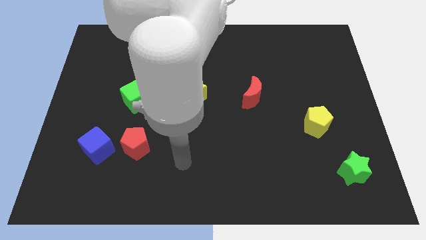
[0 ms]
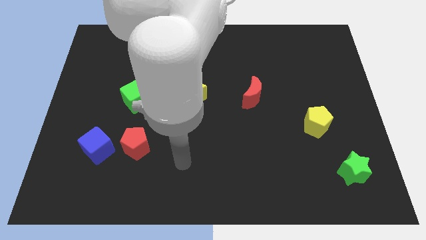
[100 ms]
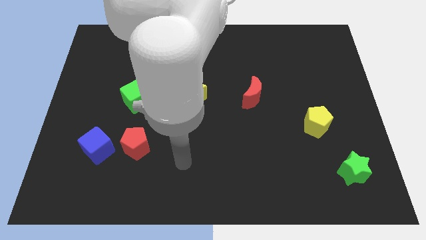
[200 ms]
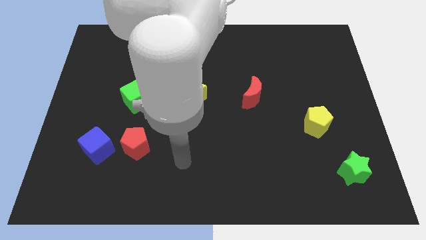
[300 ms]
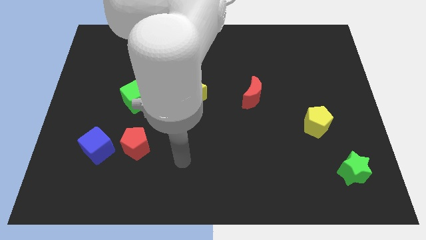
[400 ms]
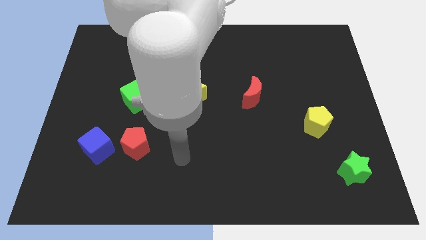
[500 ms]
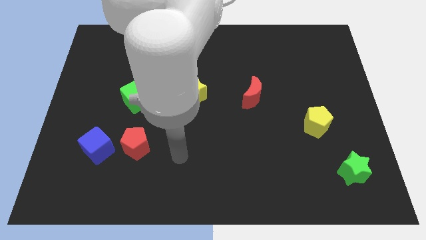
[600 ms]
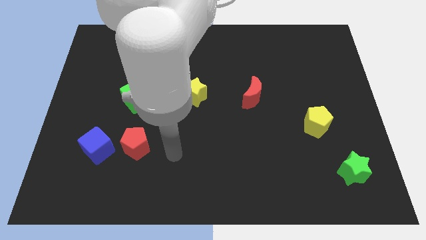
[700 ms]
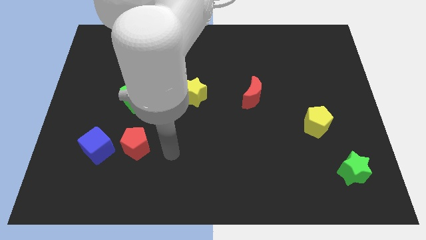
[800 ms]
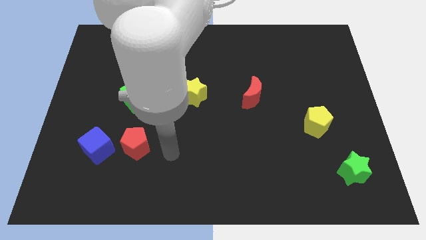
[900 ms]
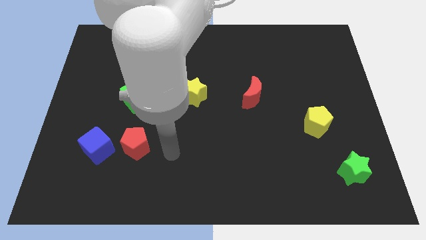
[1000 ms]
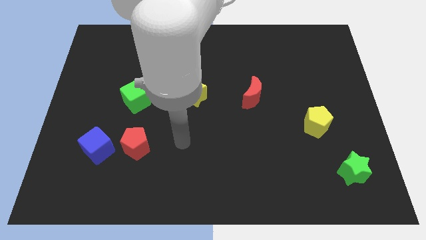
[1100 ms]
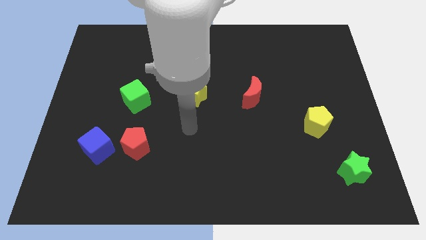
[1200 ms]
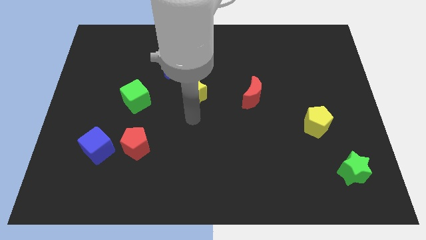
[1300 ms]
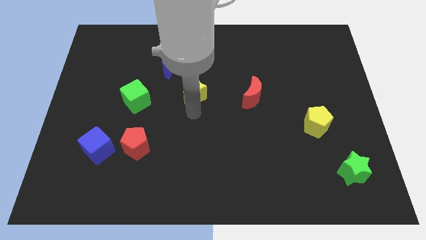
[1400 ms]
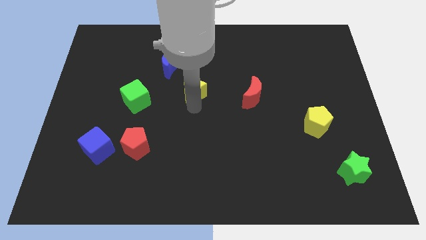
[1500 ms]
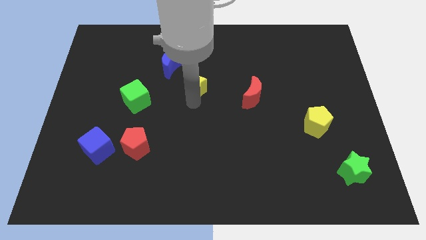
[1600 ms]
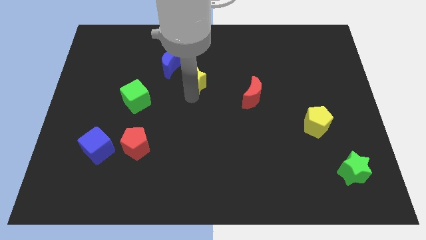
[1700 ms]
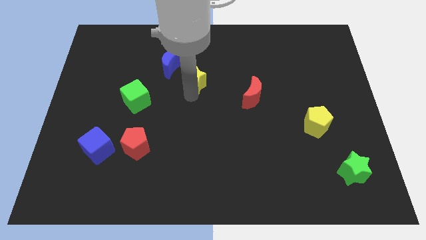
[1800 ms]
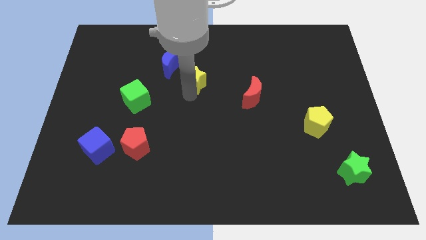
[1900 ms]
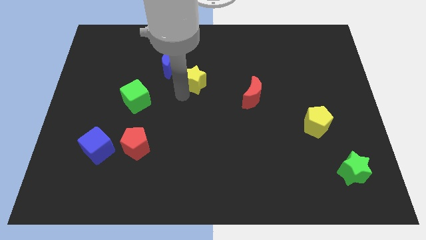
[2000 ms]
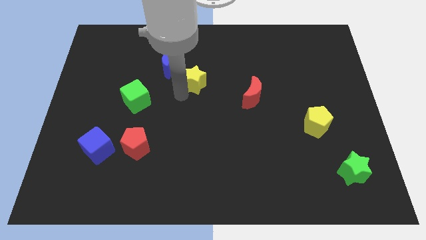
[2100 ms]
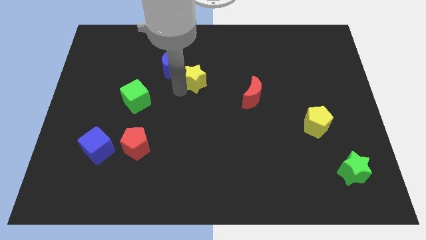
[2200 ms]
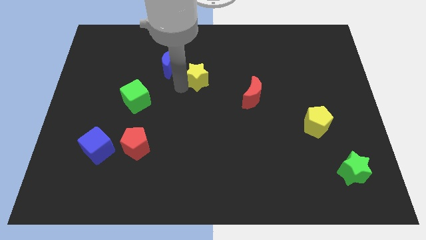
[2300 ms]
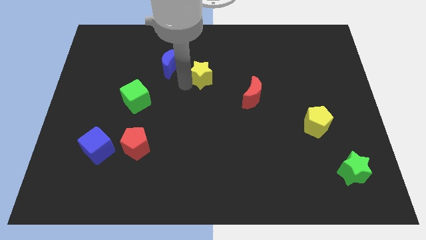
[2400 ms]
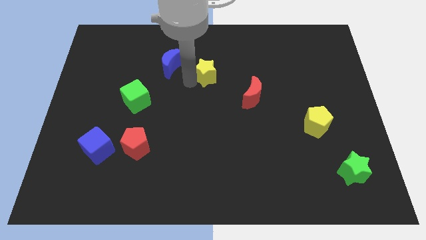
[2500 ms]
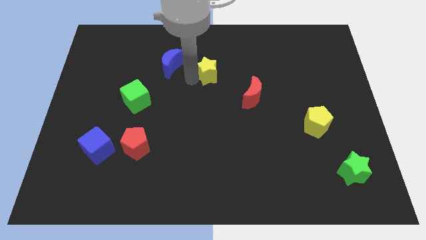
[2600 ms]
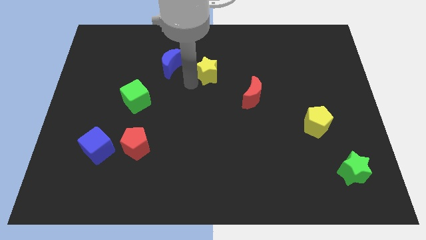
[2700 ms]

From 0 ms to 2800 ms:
move the yellow pentagon slightly up

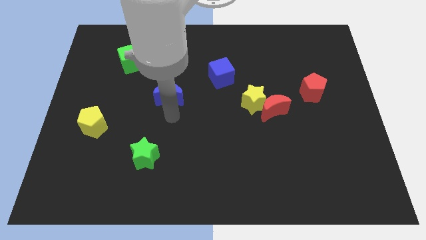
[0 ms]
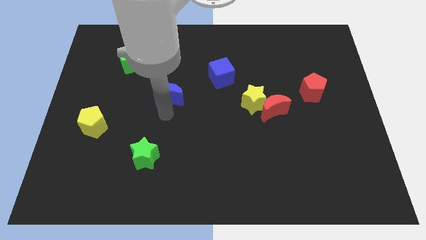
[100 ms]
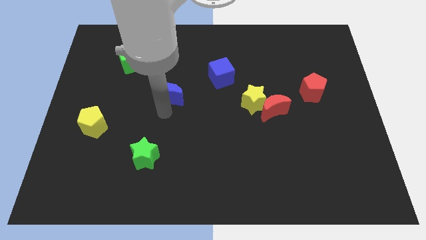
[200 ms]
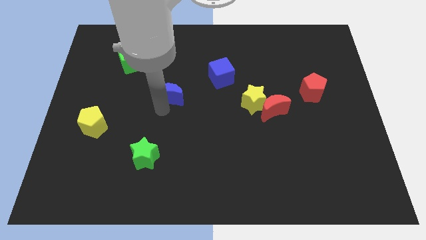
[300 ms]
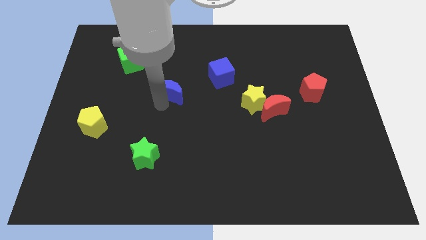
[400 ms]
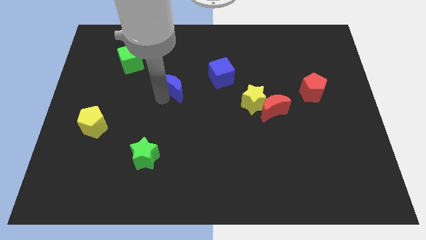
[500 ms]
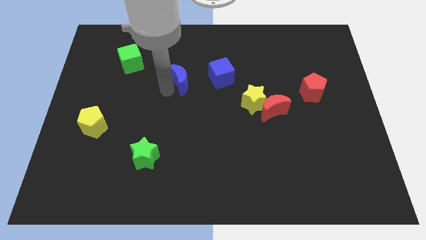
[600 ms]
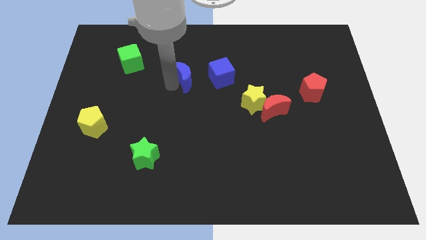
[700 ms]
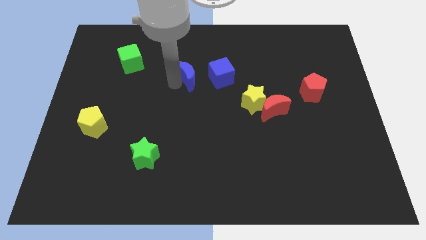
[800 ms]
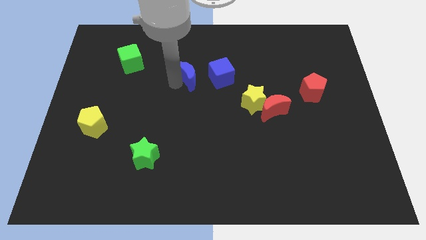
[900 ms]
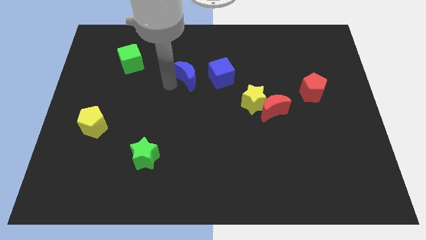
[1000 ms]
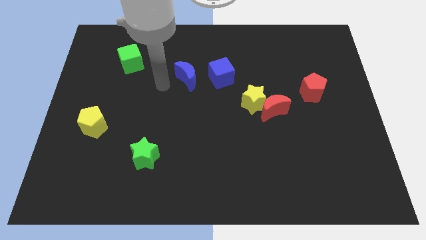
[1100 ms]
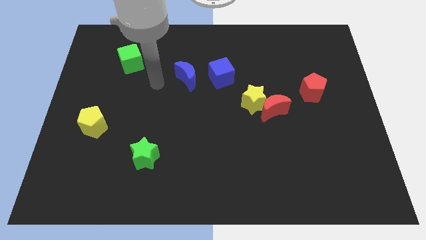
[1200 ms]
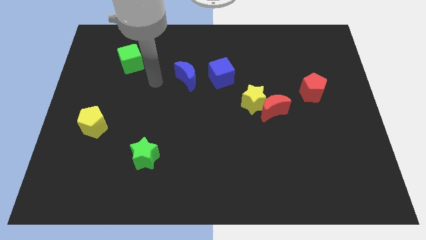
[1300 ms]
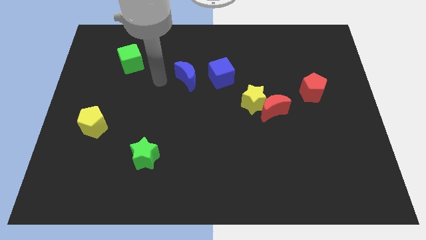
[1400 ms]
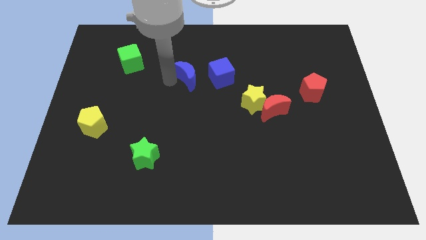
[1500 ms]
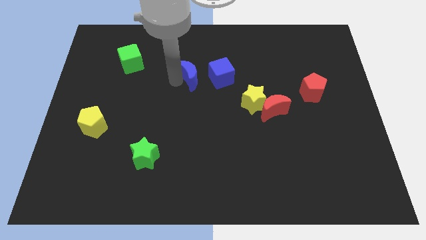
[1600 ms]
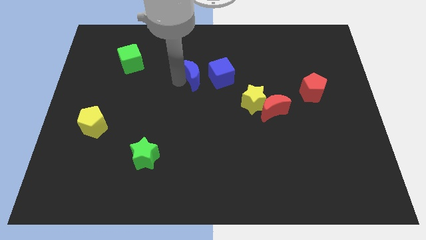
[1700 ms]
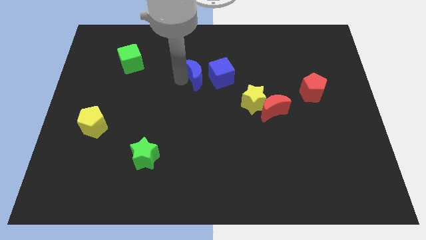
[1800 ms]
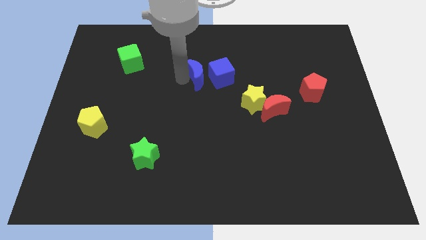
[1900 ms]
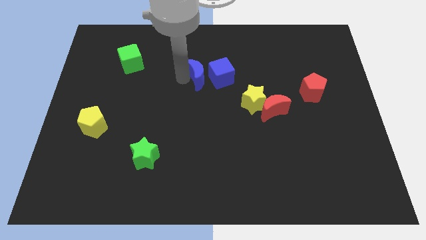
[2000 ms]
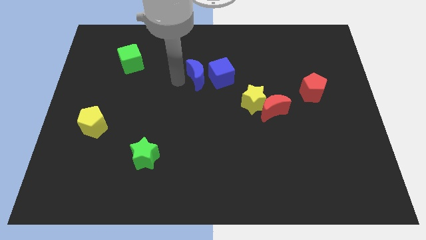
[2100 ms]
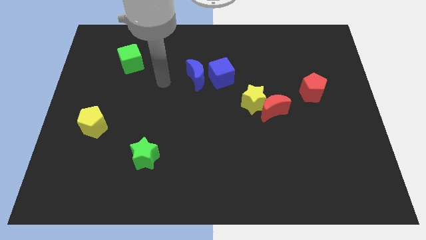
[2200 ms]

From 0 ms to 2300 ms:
push the blue moon to the left side of the blue cube

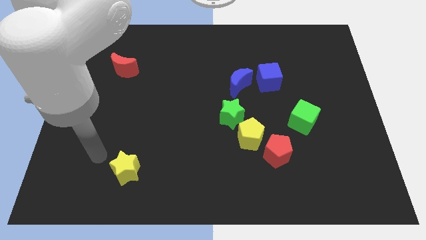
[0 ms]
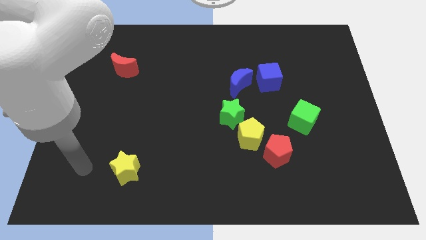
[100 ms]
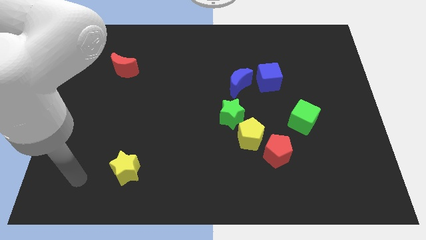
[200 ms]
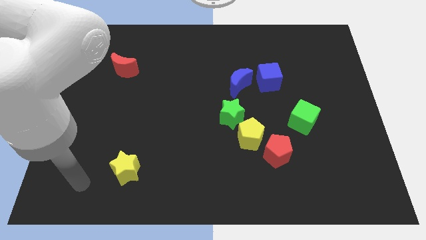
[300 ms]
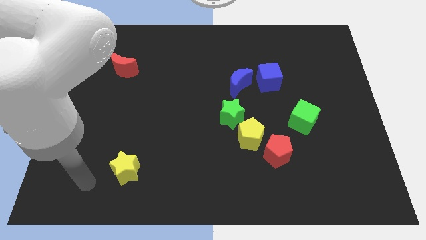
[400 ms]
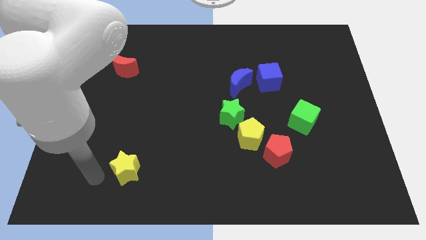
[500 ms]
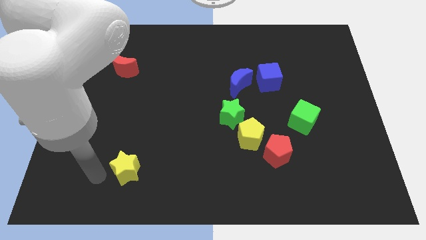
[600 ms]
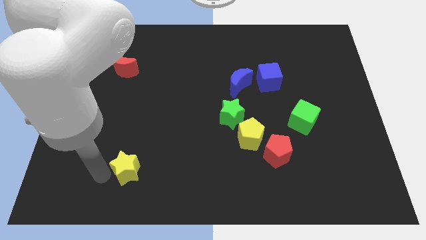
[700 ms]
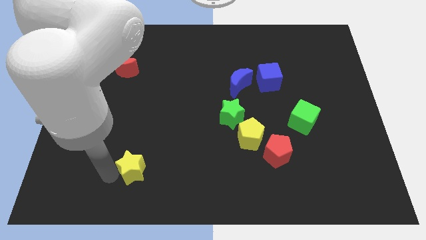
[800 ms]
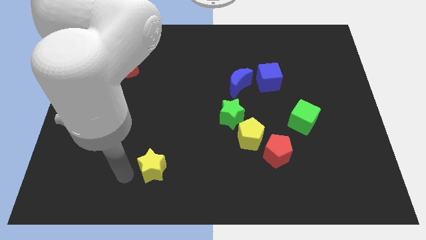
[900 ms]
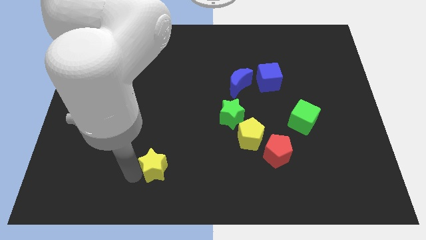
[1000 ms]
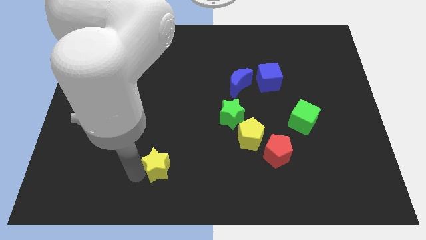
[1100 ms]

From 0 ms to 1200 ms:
move the yellow star to the bottom center

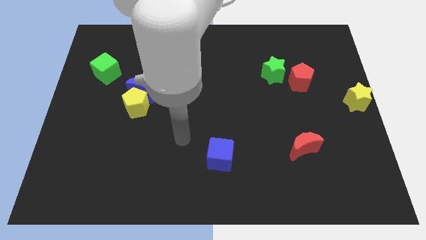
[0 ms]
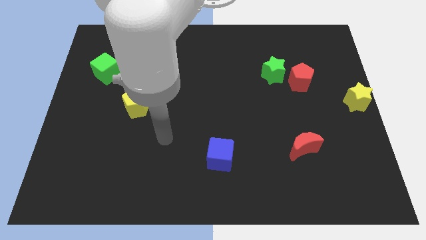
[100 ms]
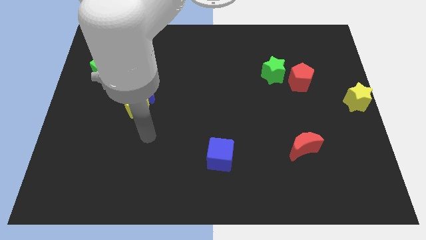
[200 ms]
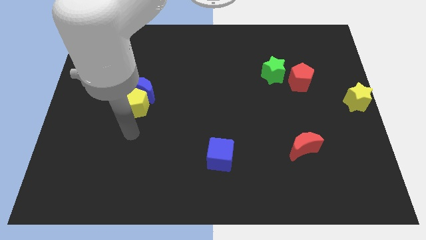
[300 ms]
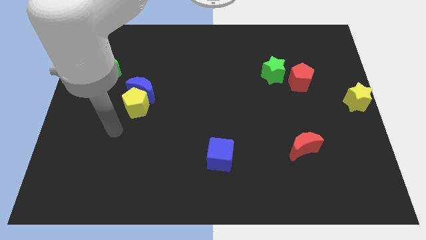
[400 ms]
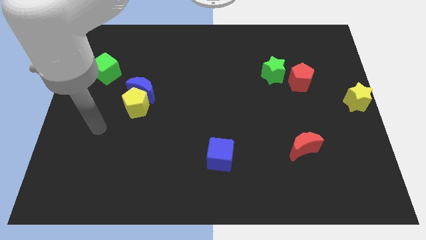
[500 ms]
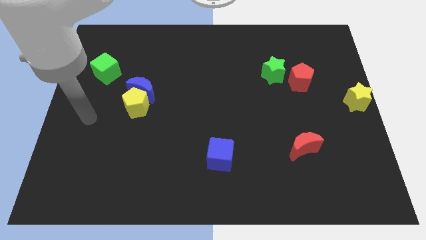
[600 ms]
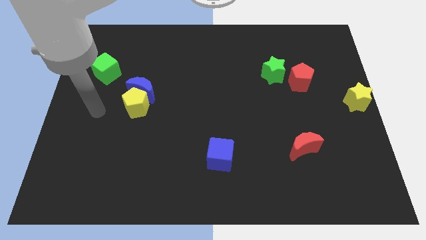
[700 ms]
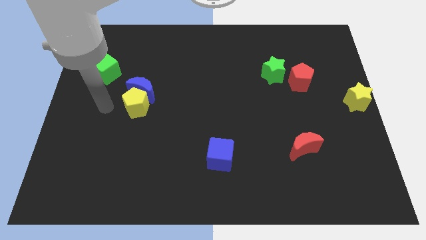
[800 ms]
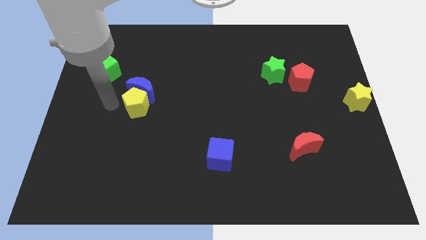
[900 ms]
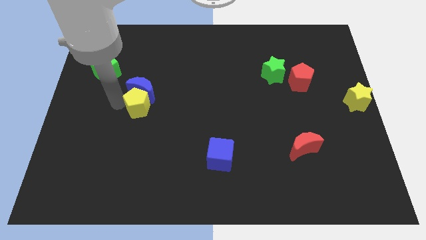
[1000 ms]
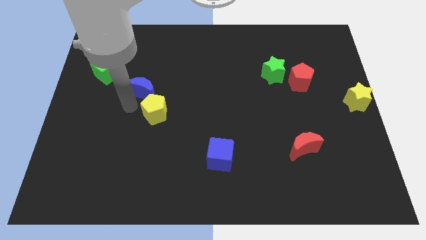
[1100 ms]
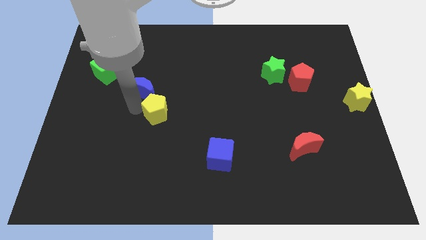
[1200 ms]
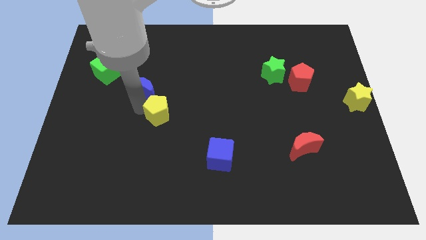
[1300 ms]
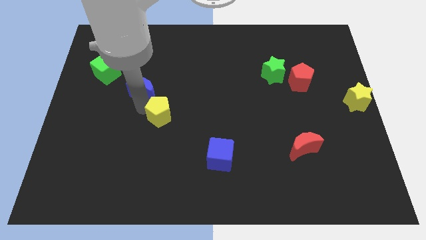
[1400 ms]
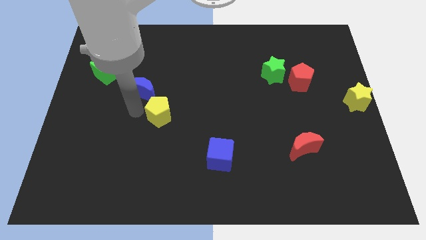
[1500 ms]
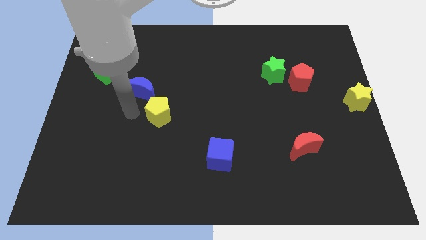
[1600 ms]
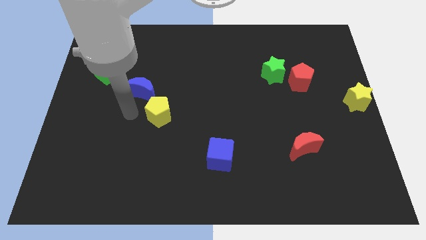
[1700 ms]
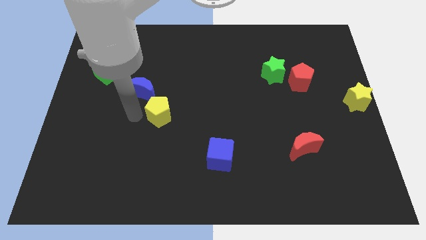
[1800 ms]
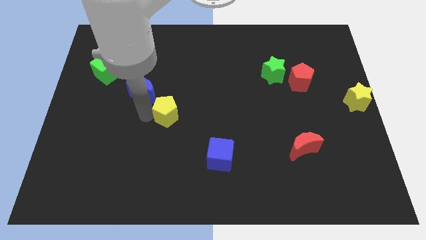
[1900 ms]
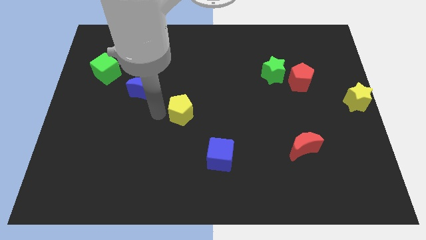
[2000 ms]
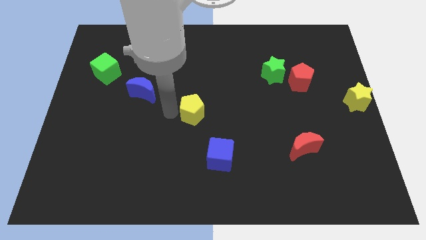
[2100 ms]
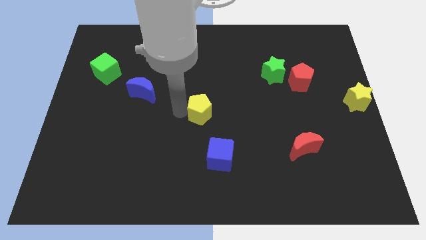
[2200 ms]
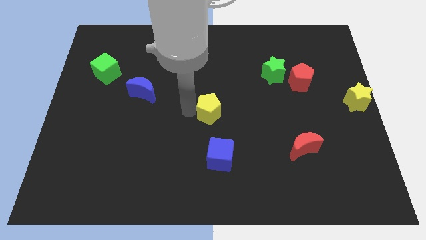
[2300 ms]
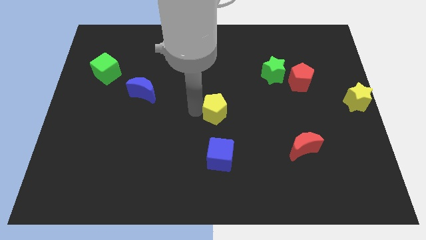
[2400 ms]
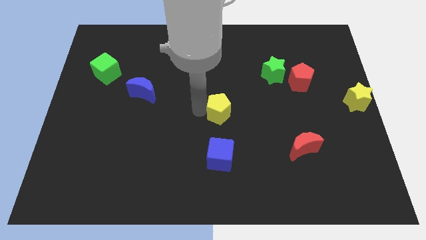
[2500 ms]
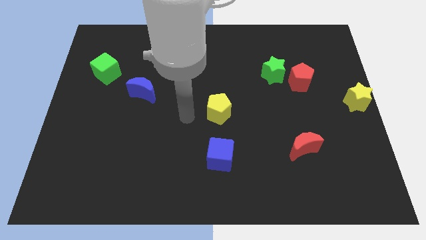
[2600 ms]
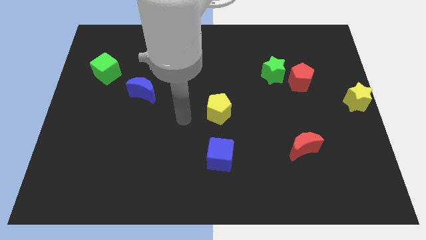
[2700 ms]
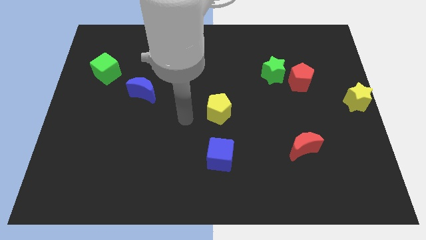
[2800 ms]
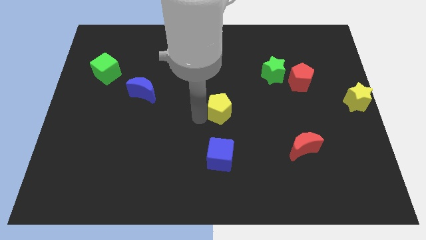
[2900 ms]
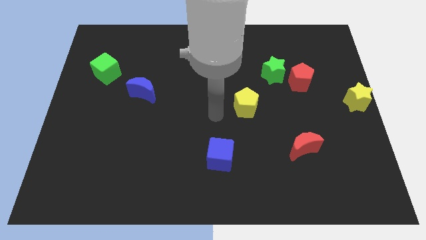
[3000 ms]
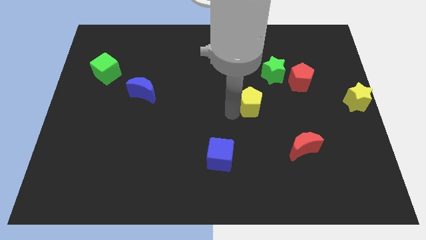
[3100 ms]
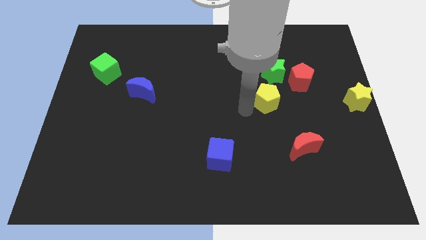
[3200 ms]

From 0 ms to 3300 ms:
separate yellow pentagon from blue crescent
